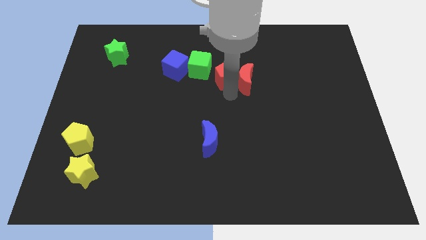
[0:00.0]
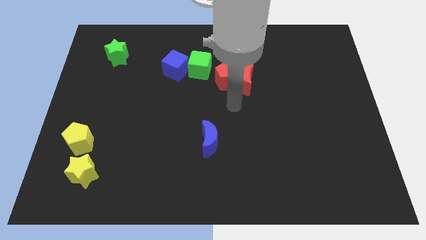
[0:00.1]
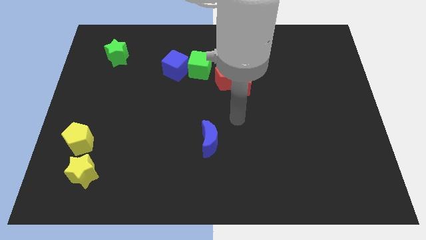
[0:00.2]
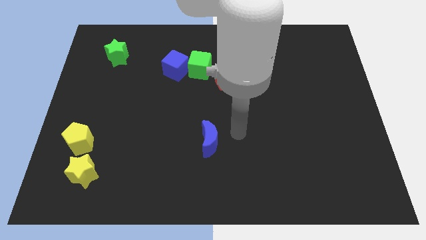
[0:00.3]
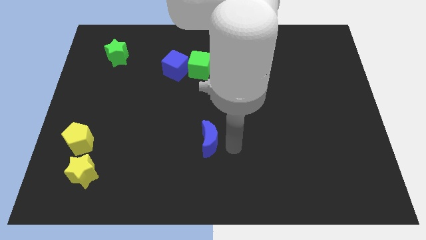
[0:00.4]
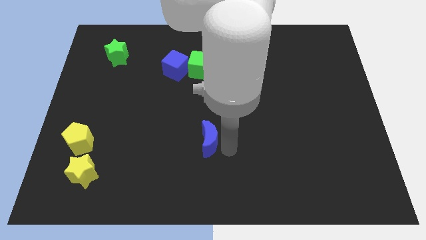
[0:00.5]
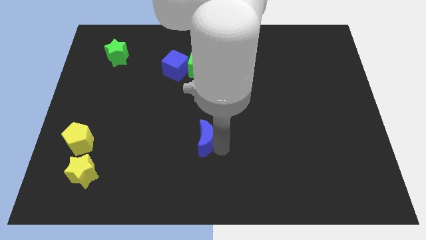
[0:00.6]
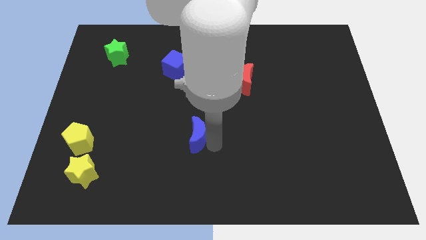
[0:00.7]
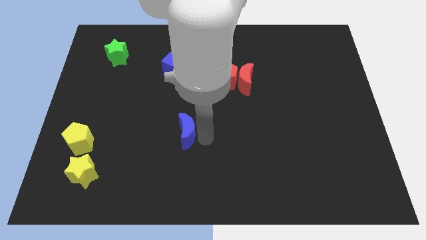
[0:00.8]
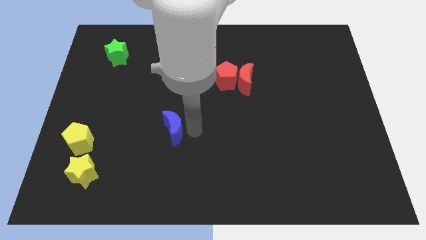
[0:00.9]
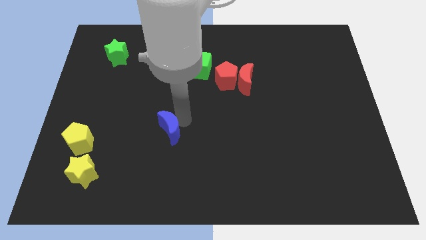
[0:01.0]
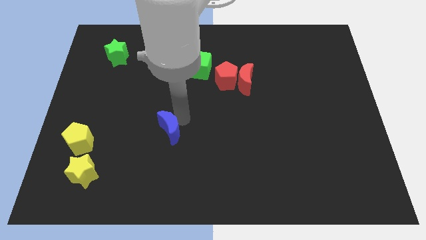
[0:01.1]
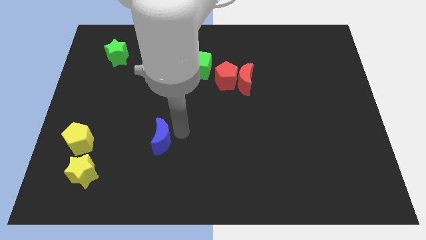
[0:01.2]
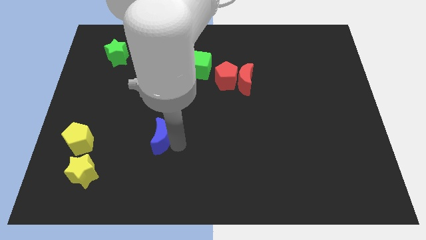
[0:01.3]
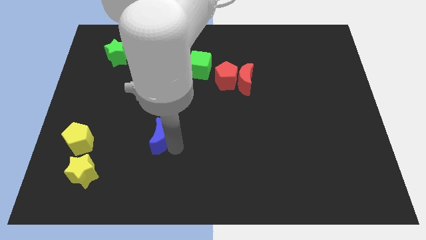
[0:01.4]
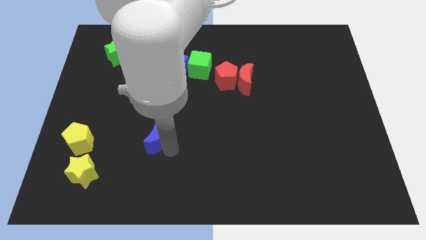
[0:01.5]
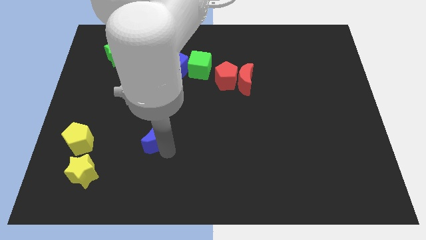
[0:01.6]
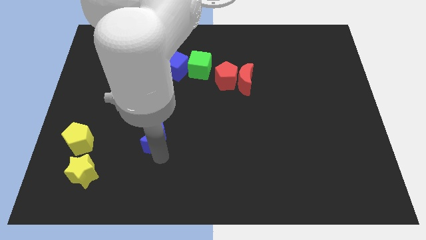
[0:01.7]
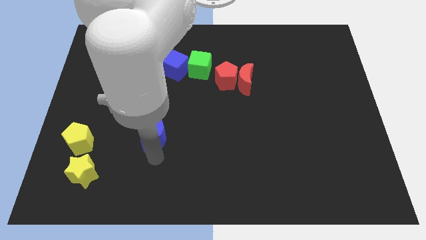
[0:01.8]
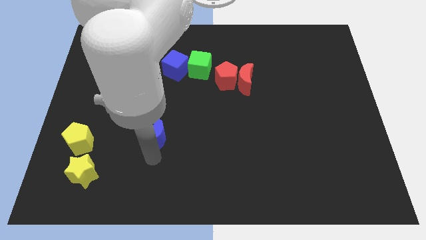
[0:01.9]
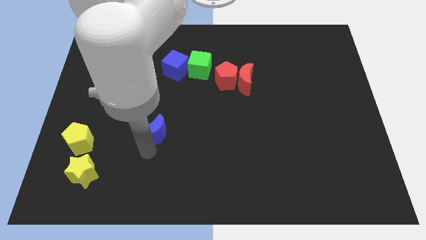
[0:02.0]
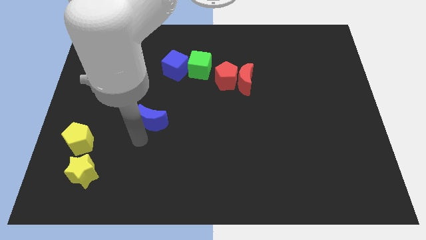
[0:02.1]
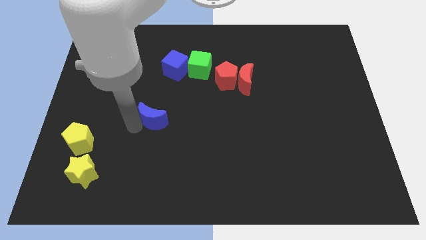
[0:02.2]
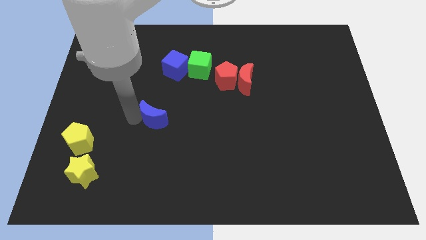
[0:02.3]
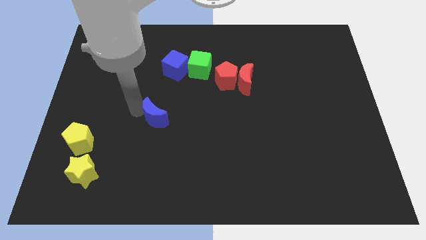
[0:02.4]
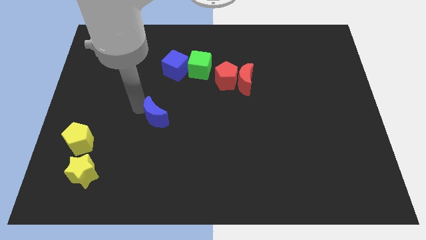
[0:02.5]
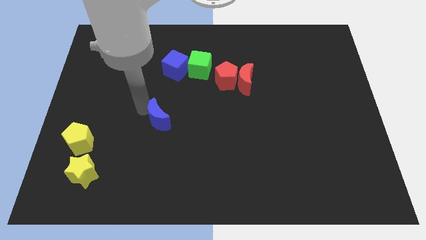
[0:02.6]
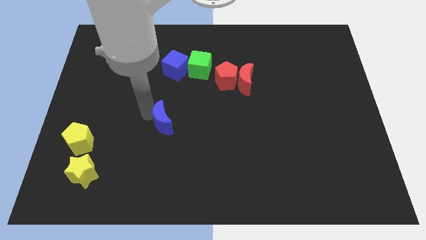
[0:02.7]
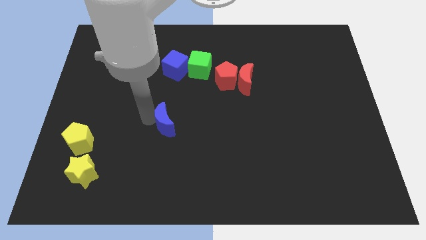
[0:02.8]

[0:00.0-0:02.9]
move the blue crescent to the blue cube

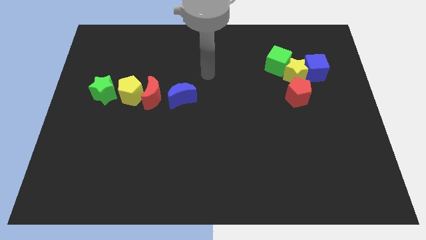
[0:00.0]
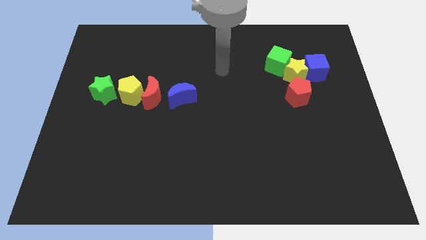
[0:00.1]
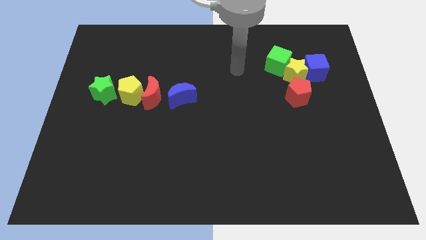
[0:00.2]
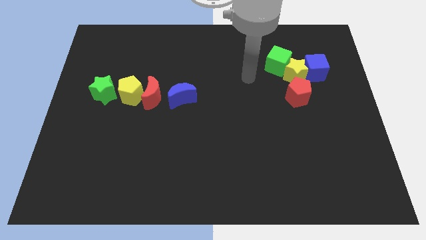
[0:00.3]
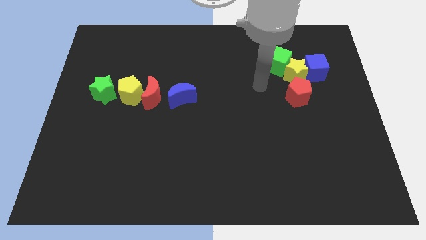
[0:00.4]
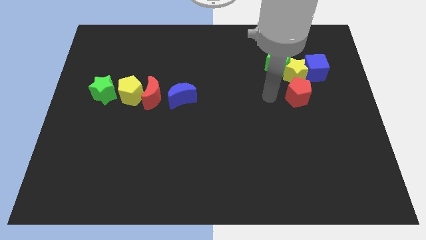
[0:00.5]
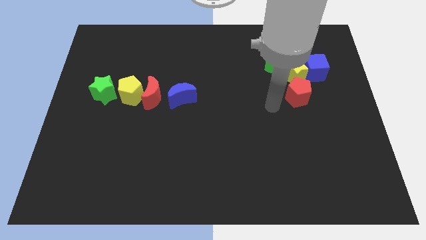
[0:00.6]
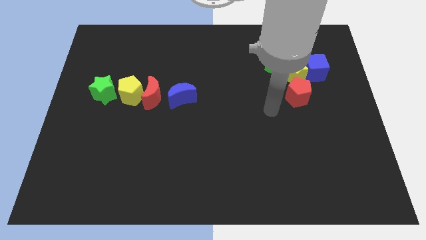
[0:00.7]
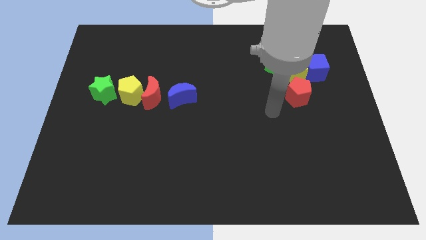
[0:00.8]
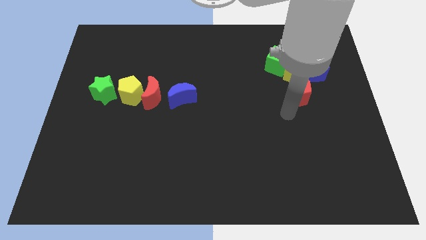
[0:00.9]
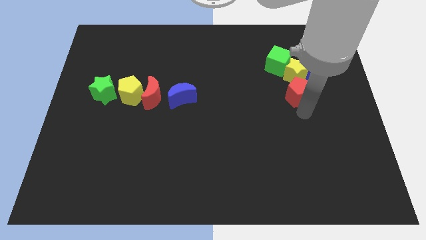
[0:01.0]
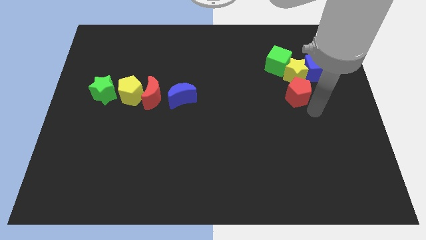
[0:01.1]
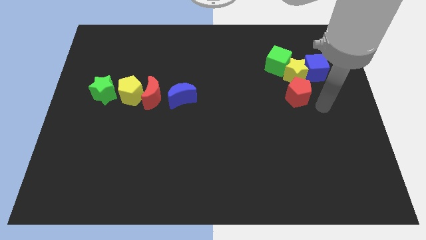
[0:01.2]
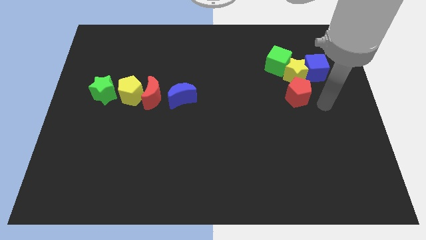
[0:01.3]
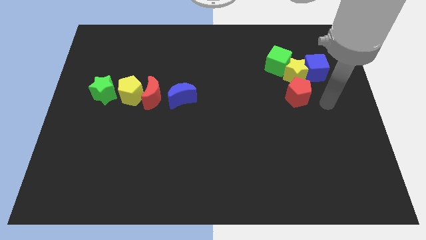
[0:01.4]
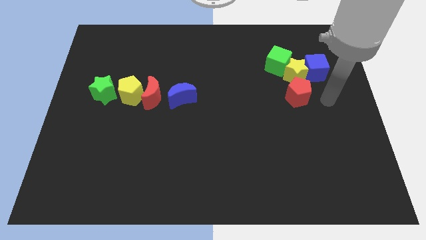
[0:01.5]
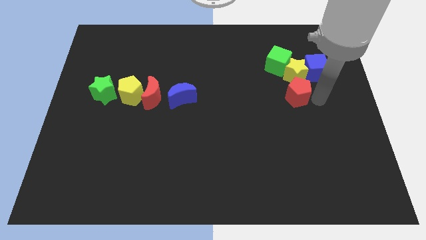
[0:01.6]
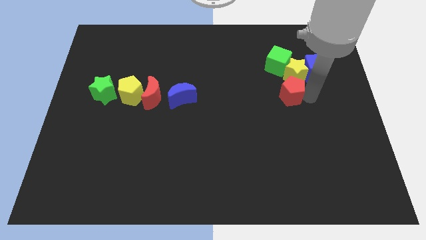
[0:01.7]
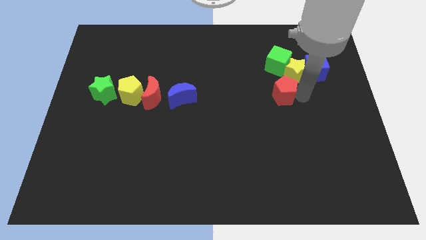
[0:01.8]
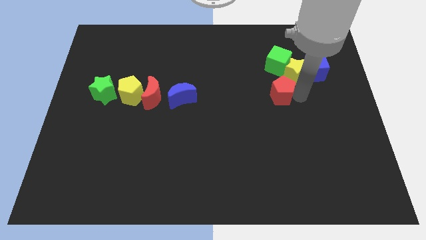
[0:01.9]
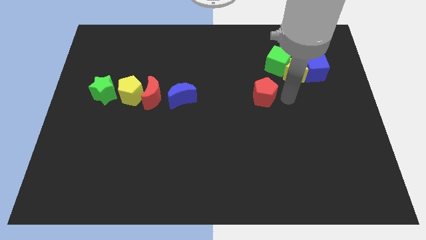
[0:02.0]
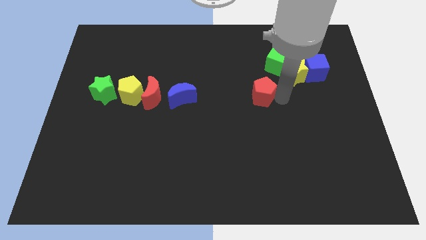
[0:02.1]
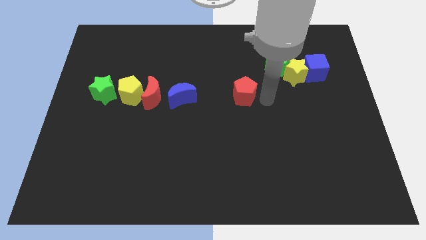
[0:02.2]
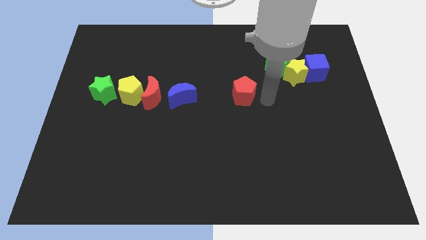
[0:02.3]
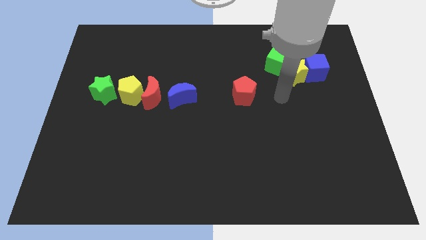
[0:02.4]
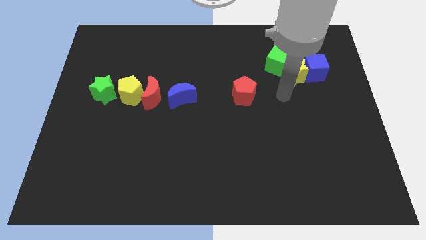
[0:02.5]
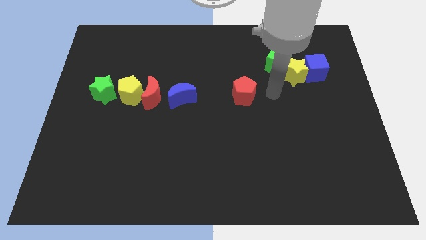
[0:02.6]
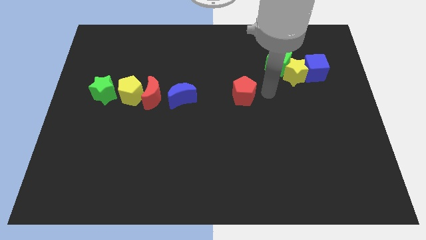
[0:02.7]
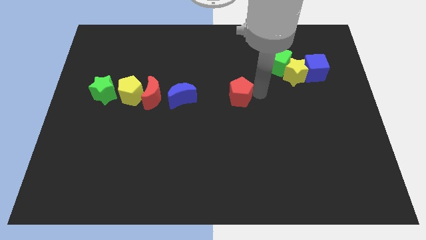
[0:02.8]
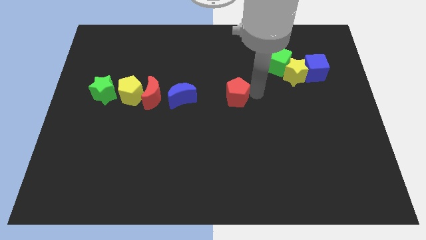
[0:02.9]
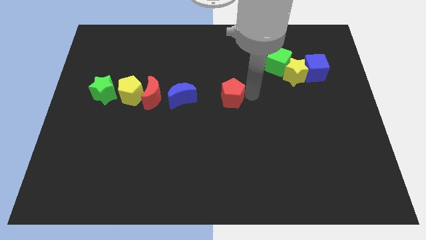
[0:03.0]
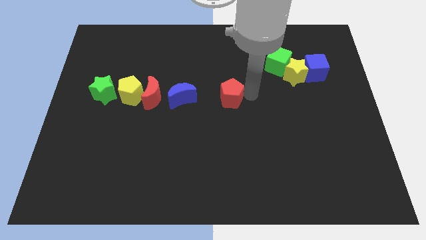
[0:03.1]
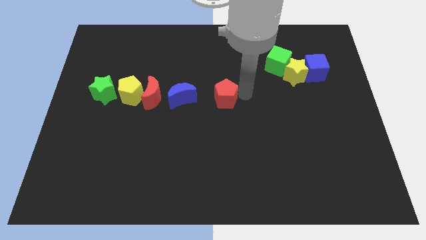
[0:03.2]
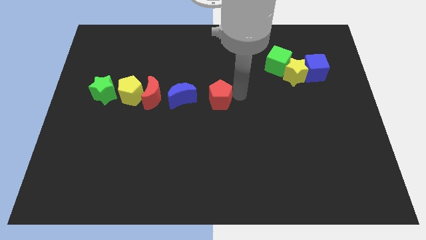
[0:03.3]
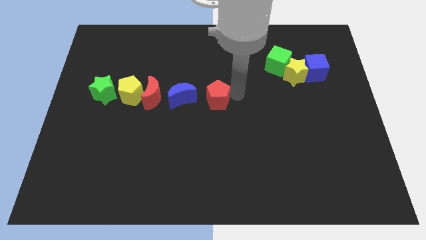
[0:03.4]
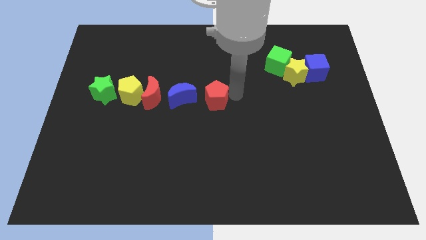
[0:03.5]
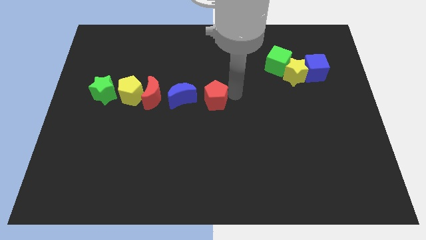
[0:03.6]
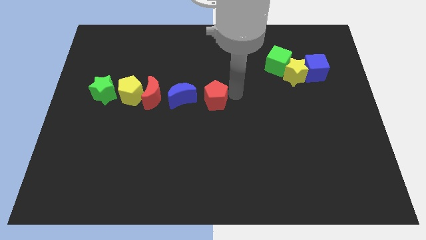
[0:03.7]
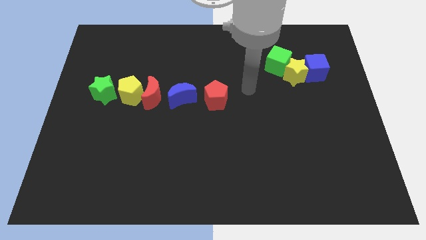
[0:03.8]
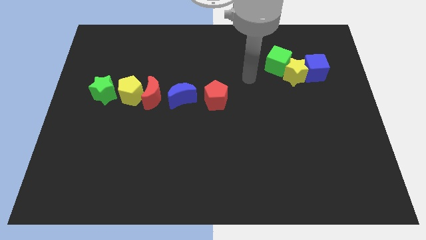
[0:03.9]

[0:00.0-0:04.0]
place the red pentagon to the right of the blue moon

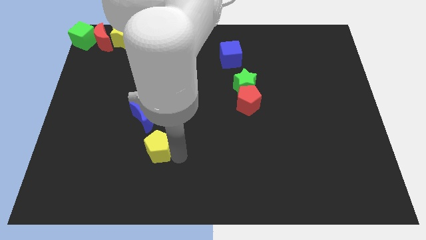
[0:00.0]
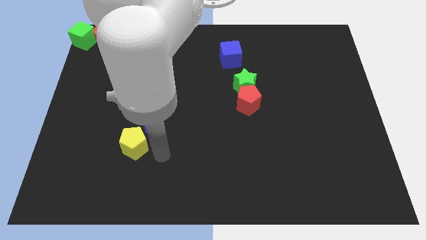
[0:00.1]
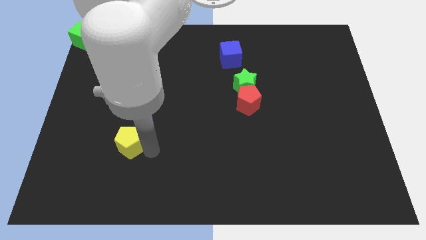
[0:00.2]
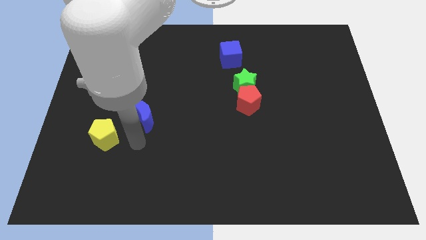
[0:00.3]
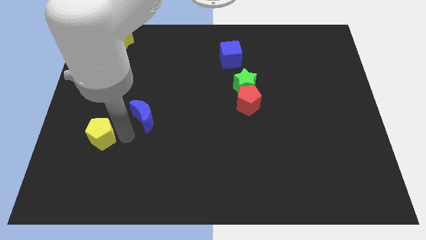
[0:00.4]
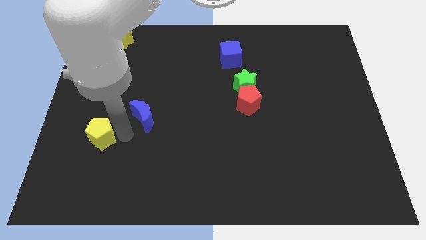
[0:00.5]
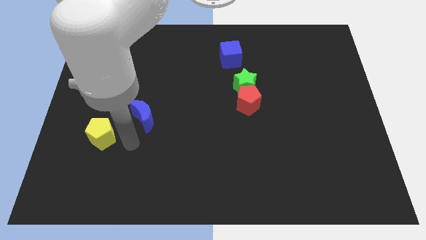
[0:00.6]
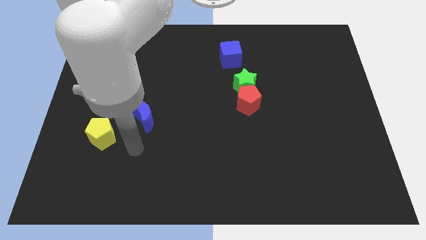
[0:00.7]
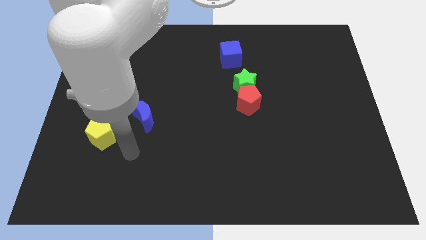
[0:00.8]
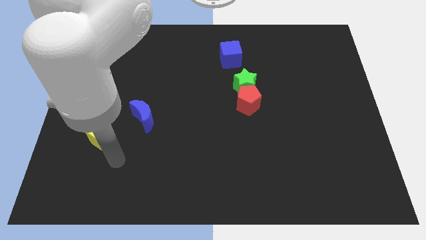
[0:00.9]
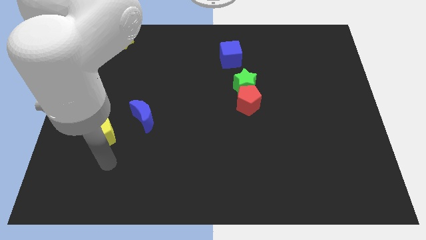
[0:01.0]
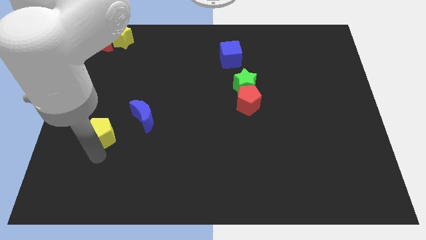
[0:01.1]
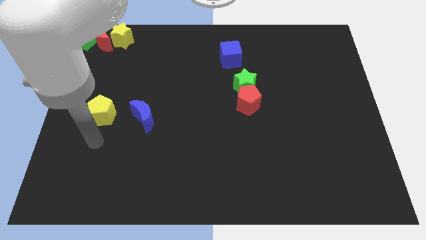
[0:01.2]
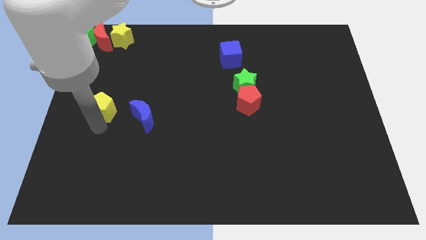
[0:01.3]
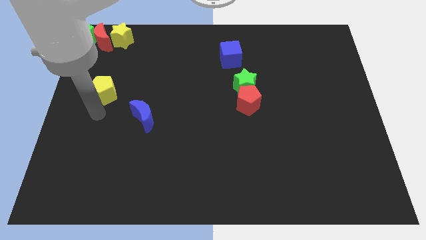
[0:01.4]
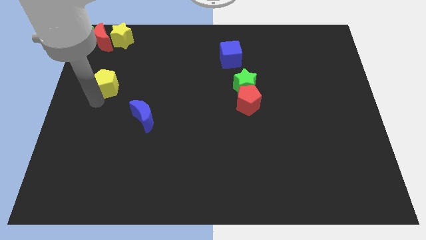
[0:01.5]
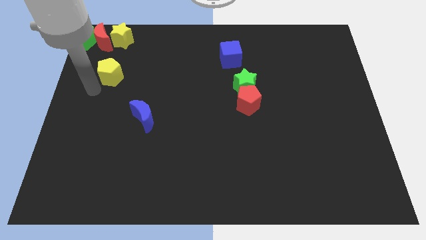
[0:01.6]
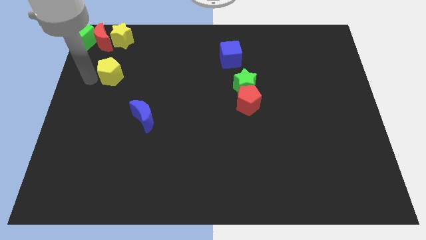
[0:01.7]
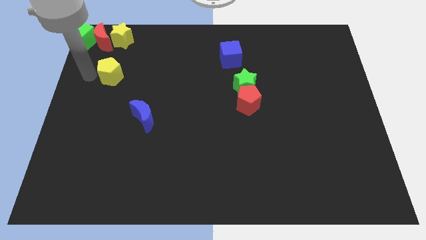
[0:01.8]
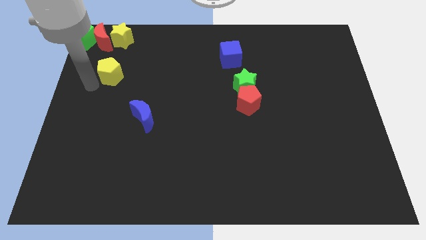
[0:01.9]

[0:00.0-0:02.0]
move yellow pentagon towards the top left corner of the board

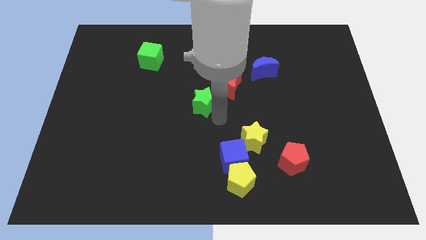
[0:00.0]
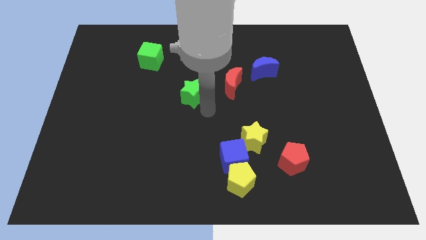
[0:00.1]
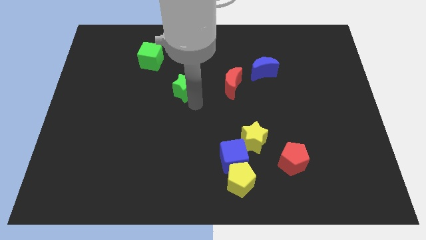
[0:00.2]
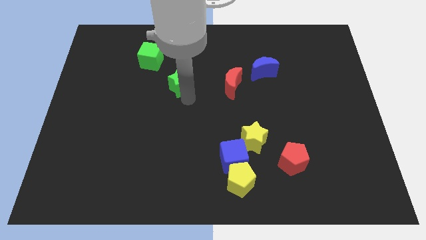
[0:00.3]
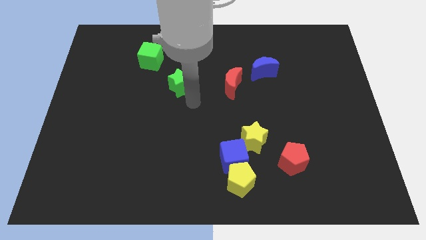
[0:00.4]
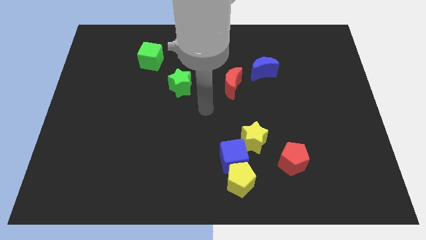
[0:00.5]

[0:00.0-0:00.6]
slide green star towards green cube
